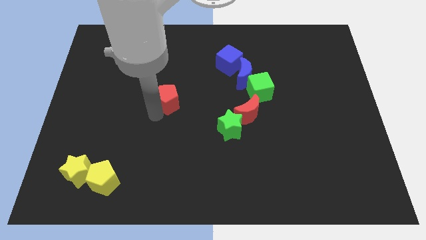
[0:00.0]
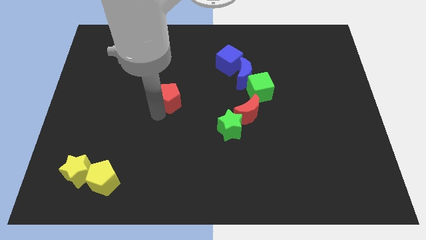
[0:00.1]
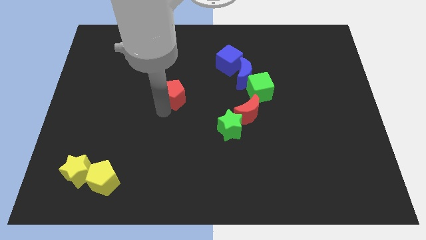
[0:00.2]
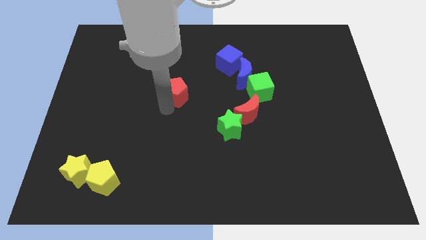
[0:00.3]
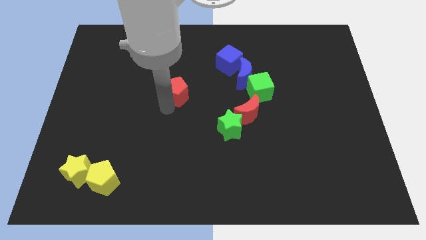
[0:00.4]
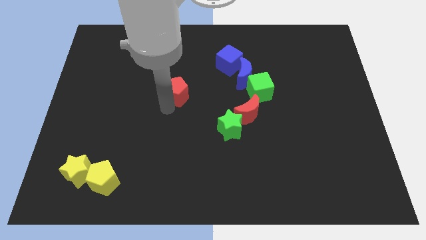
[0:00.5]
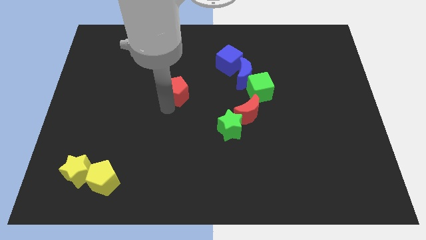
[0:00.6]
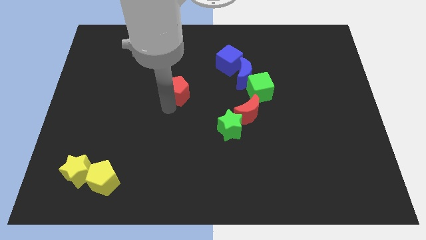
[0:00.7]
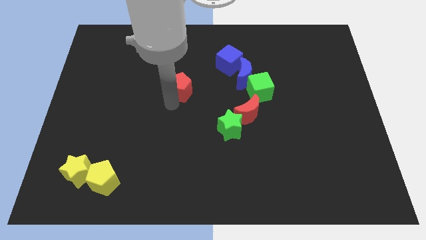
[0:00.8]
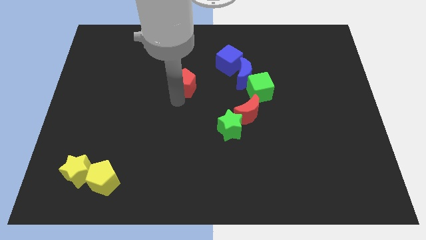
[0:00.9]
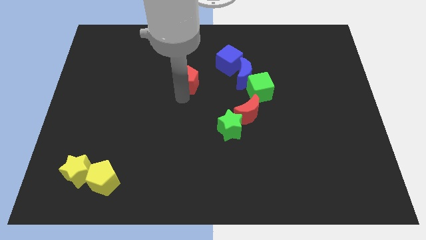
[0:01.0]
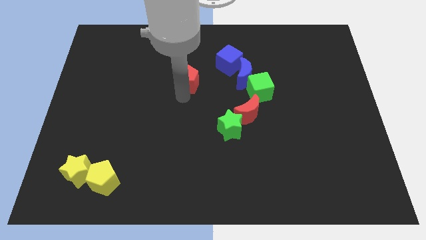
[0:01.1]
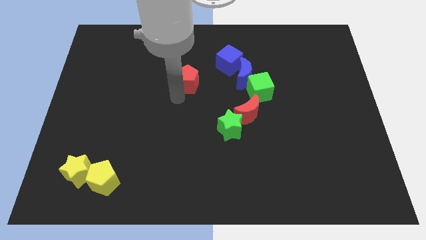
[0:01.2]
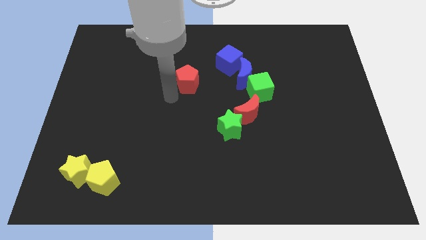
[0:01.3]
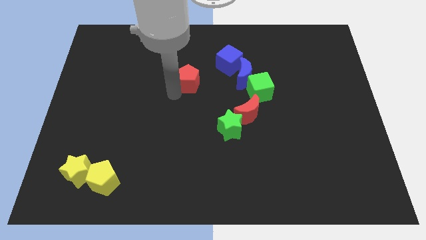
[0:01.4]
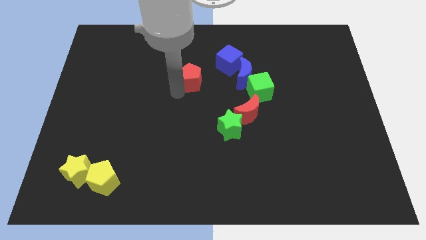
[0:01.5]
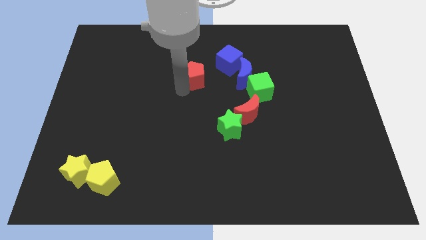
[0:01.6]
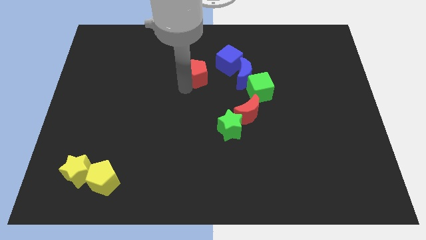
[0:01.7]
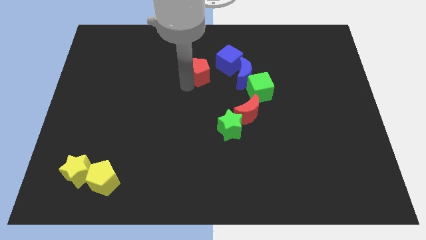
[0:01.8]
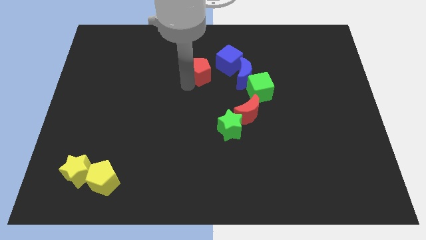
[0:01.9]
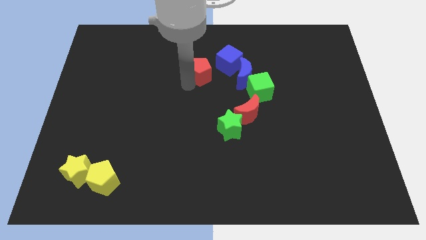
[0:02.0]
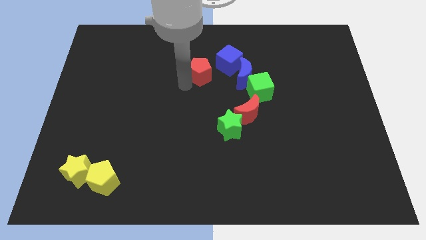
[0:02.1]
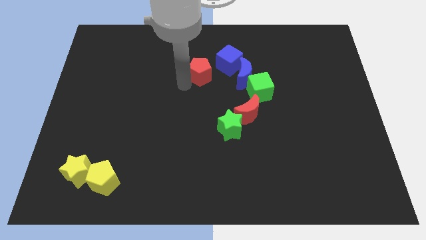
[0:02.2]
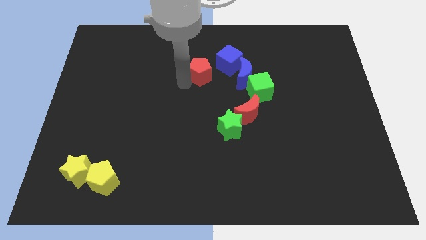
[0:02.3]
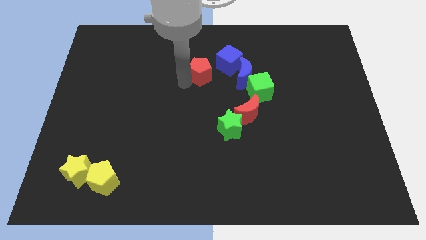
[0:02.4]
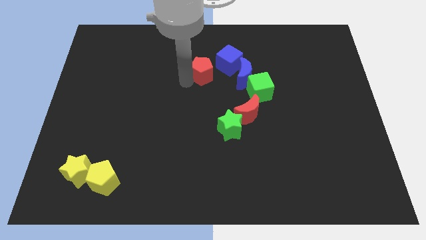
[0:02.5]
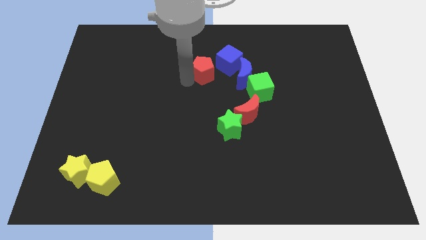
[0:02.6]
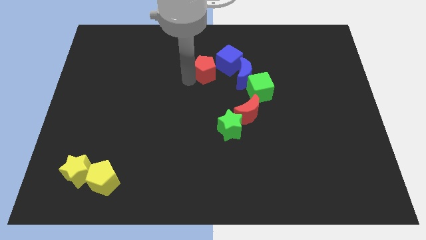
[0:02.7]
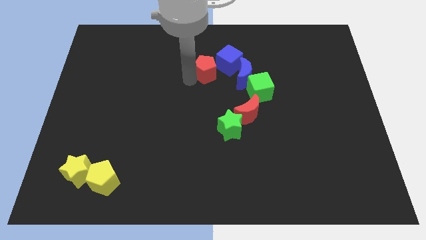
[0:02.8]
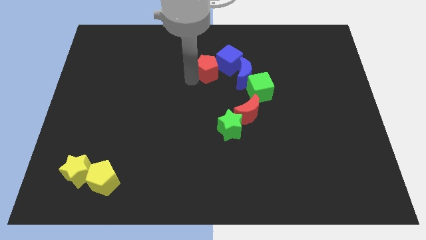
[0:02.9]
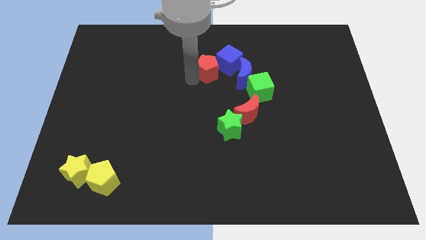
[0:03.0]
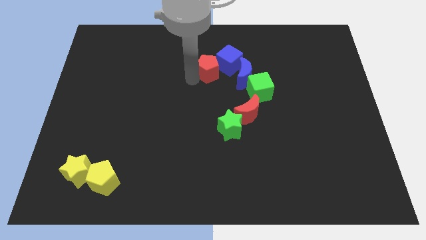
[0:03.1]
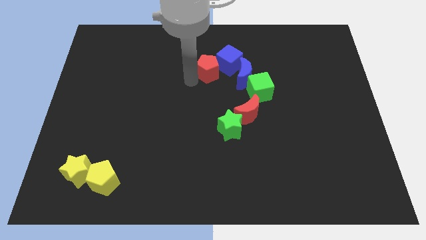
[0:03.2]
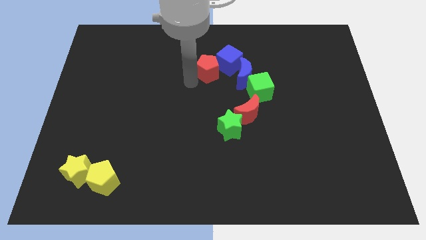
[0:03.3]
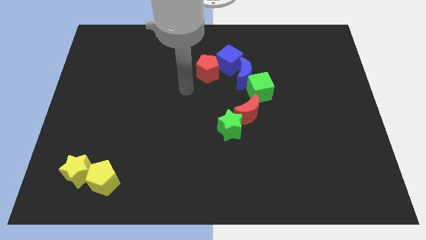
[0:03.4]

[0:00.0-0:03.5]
push red pentagon beside blue cube

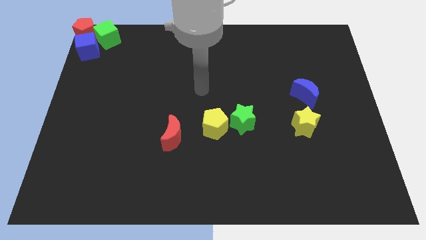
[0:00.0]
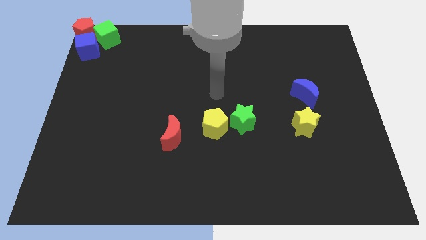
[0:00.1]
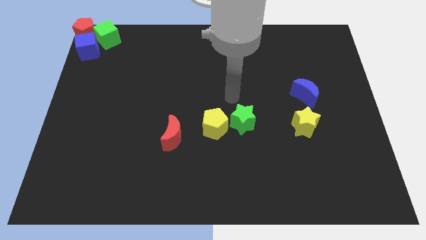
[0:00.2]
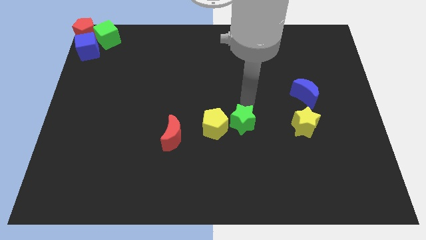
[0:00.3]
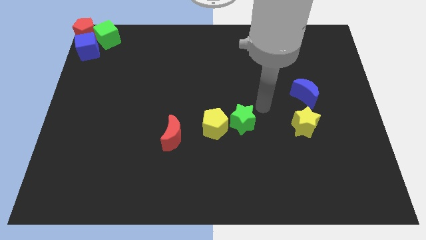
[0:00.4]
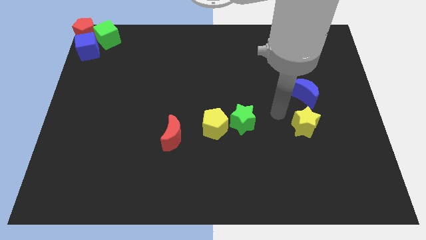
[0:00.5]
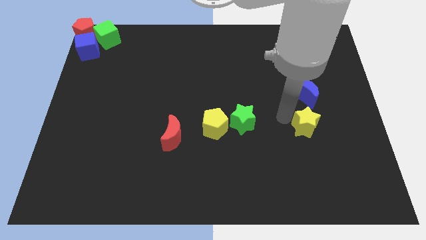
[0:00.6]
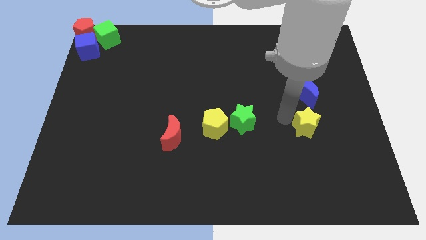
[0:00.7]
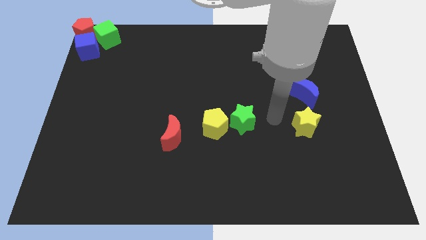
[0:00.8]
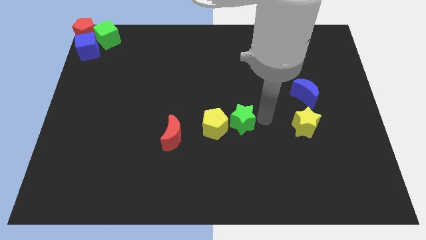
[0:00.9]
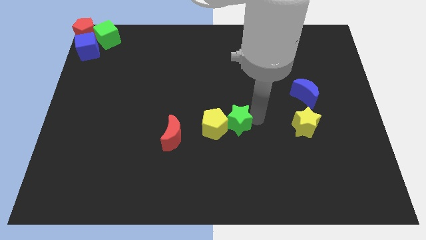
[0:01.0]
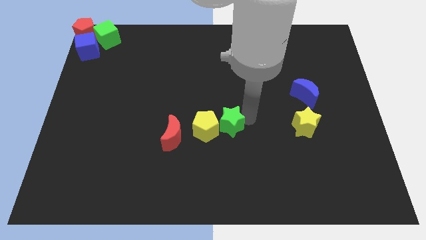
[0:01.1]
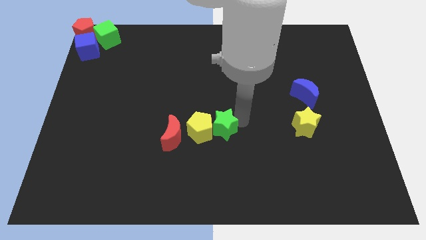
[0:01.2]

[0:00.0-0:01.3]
push the yellow pentagon and green star close to the red moon

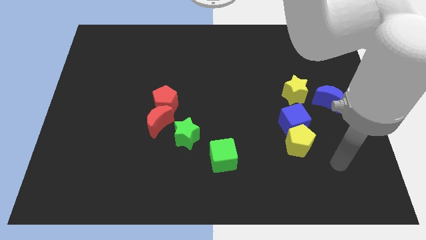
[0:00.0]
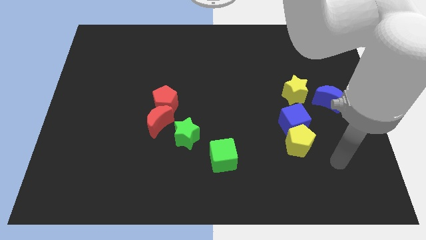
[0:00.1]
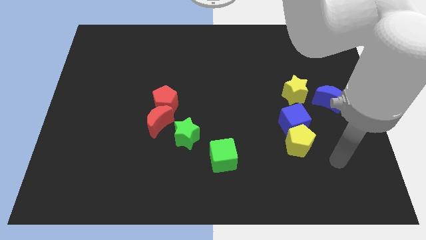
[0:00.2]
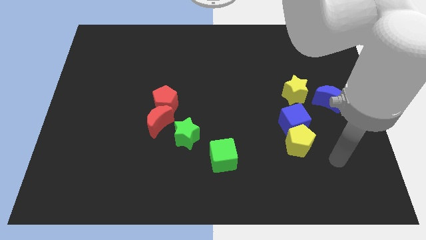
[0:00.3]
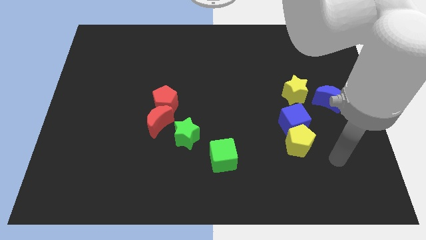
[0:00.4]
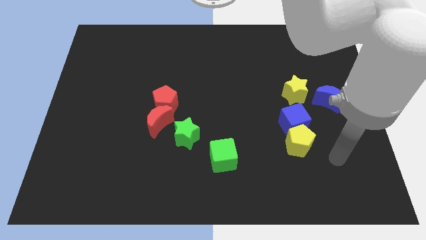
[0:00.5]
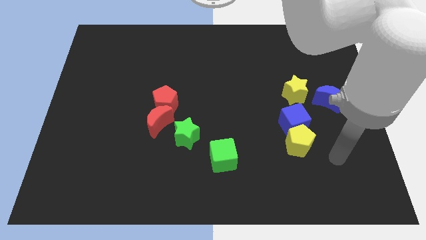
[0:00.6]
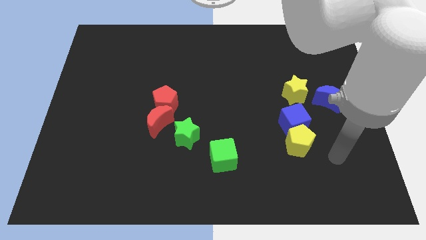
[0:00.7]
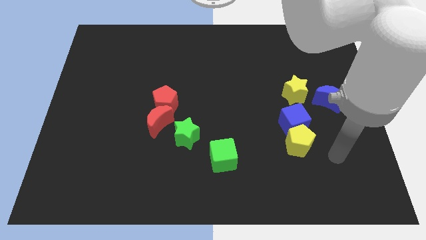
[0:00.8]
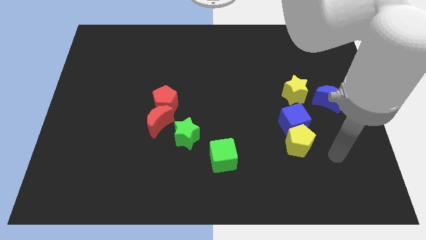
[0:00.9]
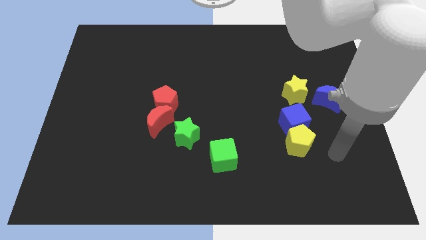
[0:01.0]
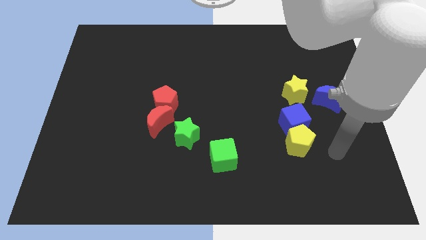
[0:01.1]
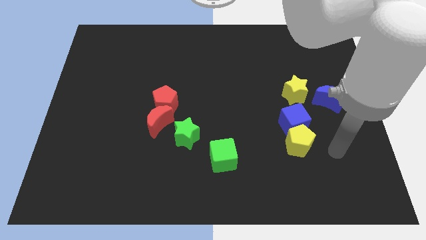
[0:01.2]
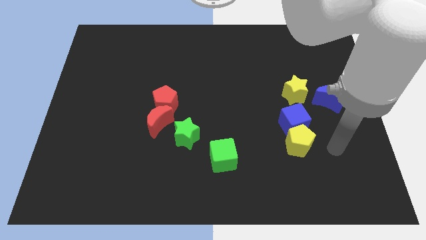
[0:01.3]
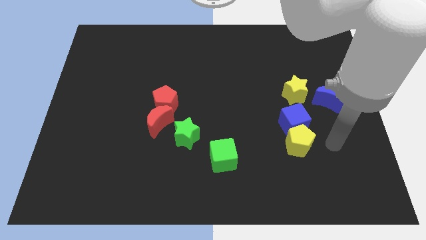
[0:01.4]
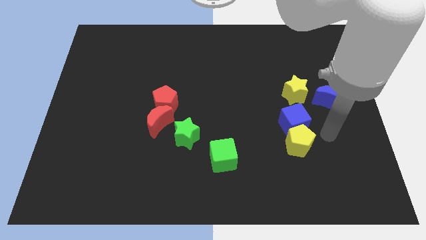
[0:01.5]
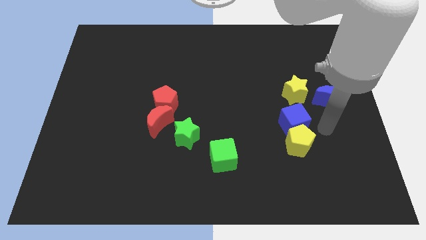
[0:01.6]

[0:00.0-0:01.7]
move the arm near the blue cube

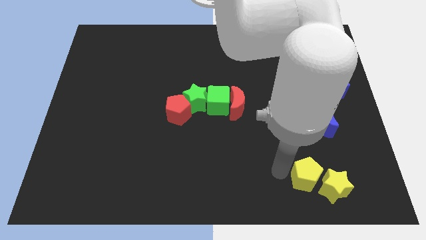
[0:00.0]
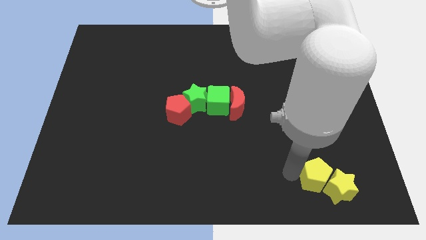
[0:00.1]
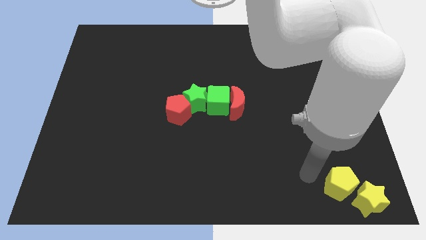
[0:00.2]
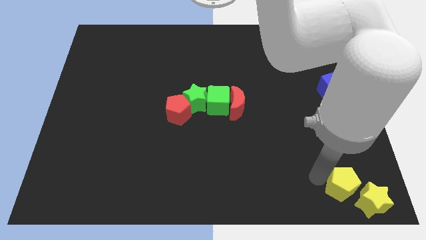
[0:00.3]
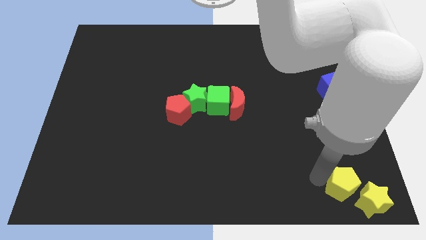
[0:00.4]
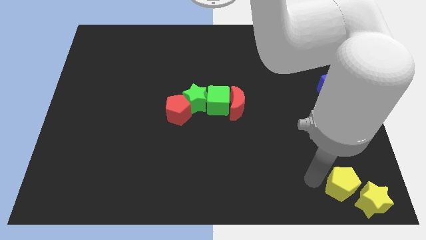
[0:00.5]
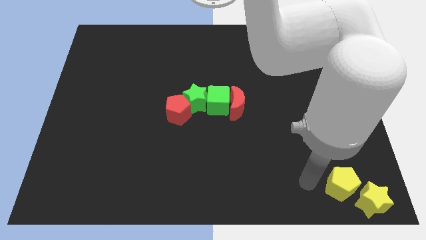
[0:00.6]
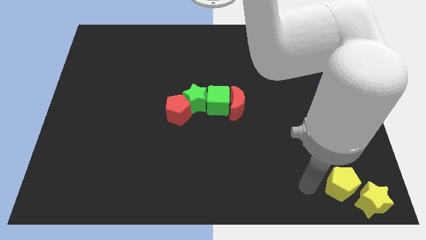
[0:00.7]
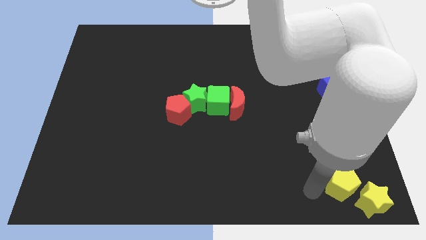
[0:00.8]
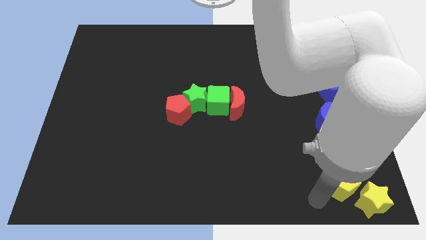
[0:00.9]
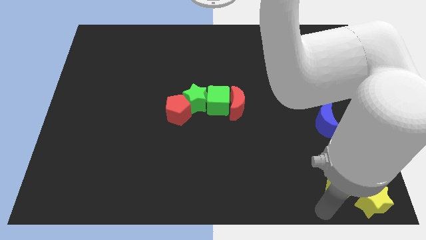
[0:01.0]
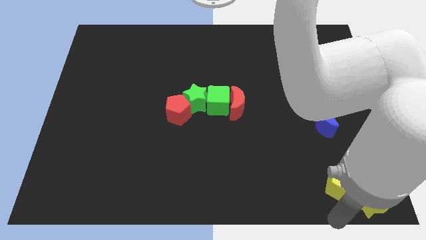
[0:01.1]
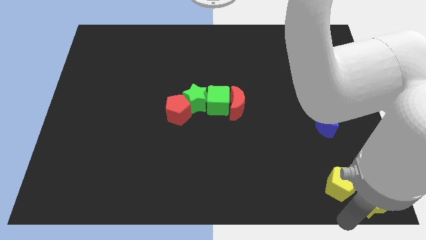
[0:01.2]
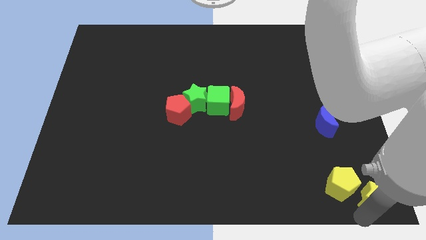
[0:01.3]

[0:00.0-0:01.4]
push the yellow pentagon and yellow star towards the right bottom

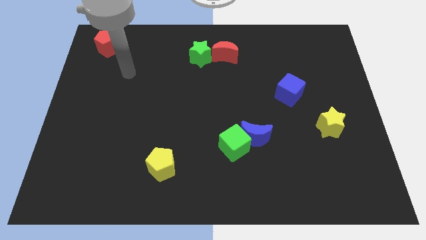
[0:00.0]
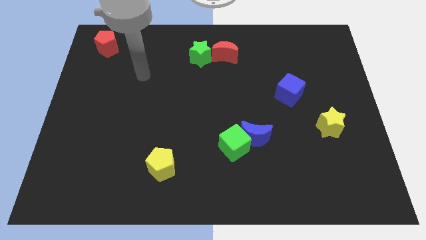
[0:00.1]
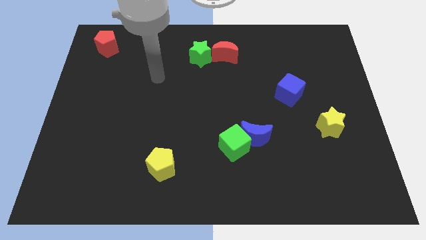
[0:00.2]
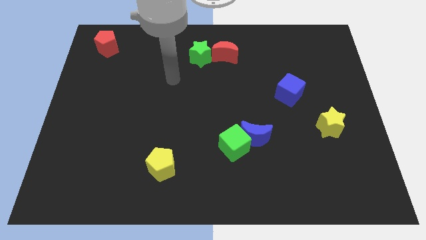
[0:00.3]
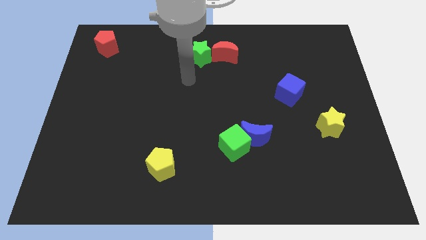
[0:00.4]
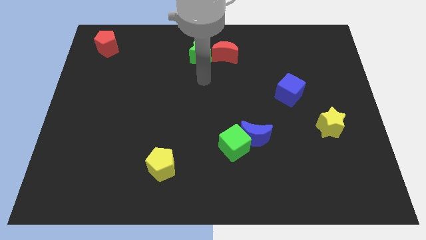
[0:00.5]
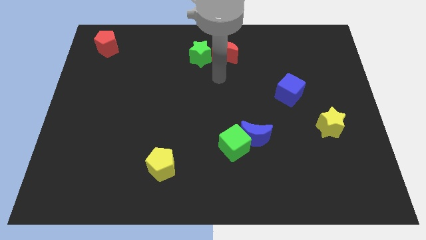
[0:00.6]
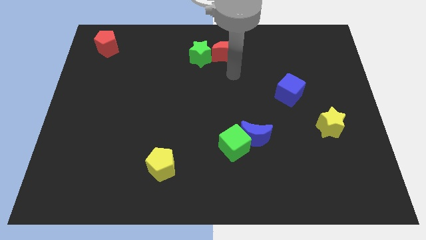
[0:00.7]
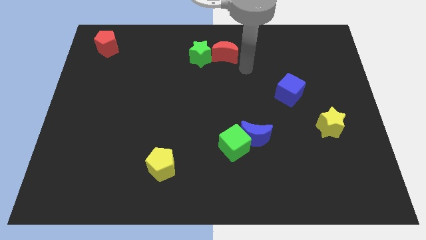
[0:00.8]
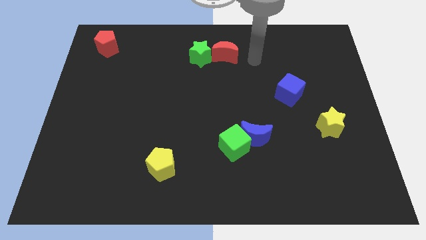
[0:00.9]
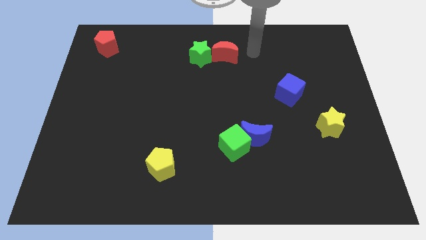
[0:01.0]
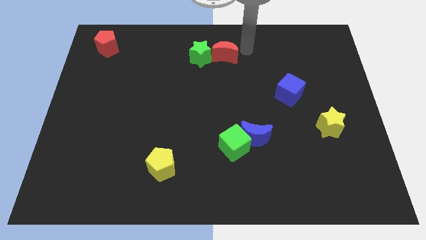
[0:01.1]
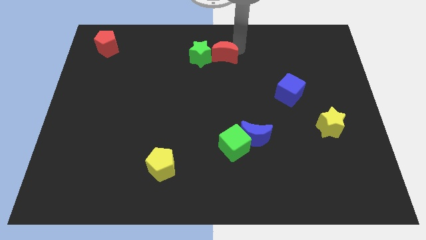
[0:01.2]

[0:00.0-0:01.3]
move your arm towards the red crescent
